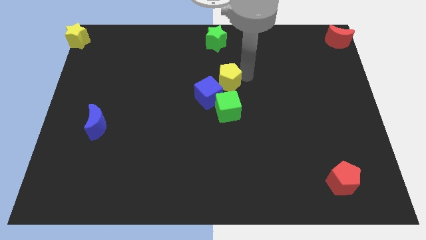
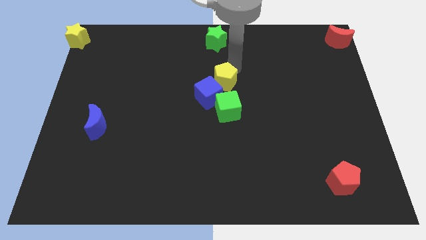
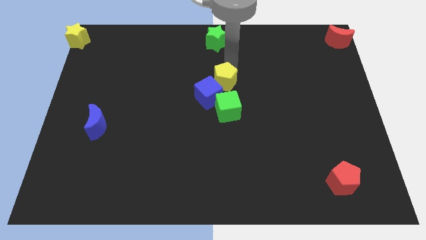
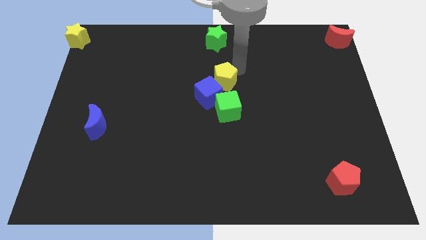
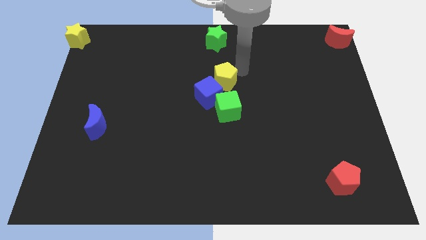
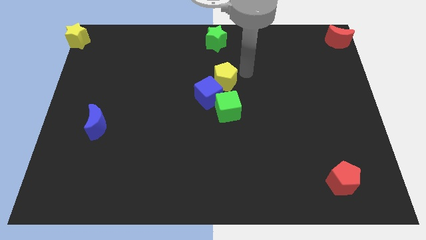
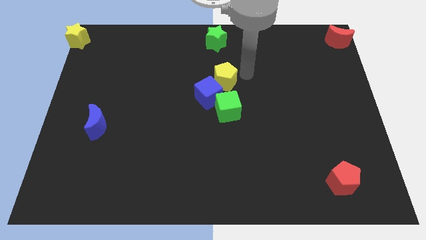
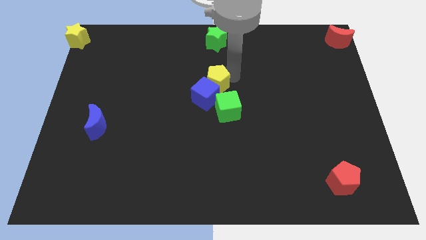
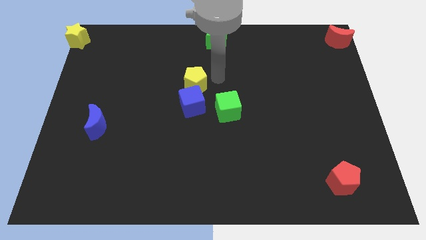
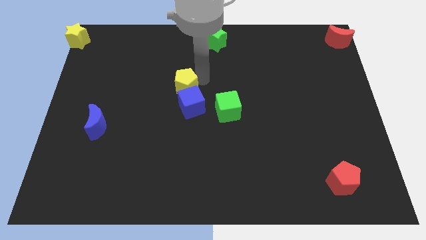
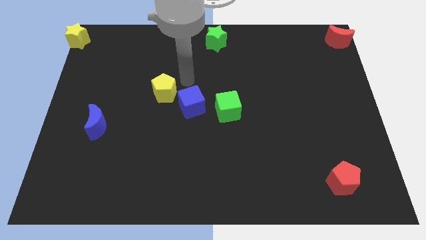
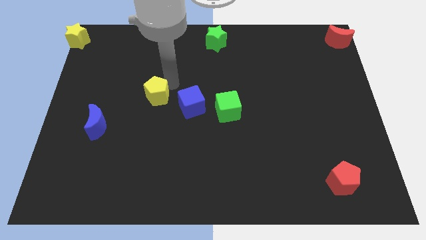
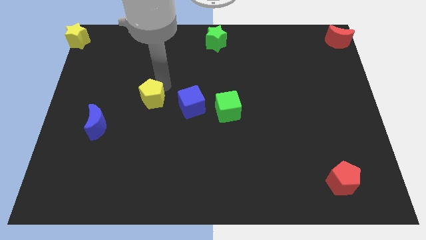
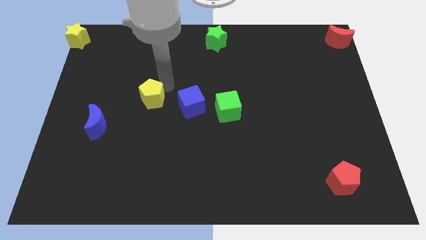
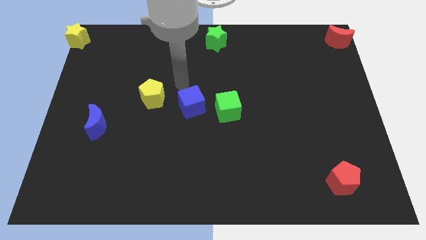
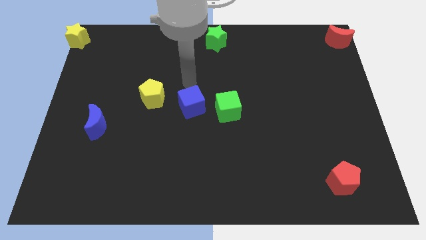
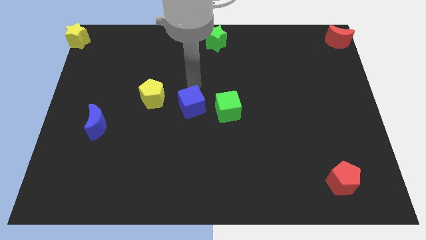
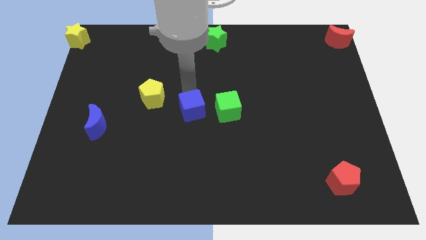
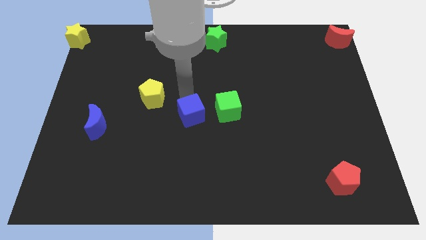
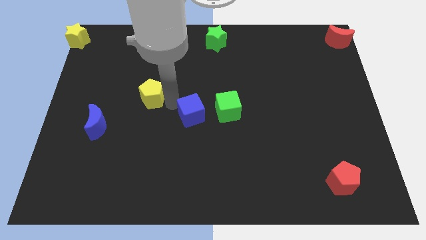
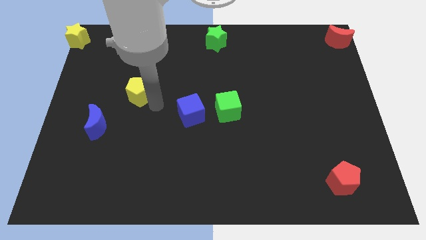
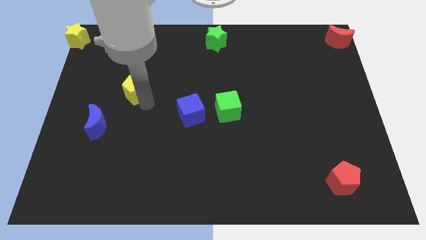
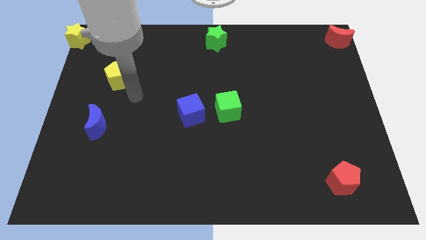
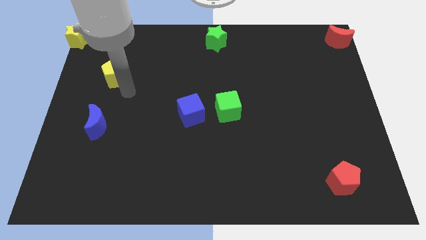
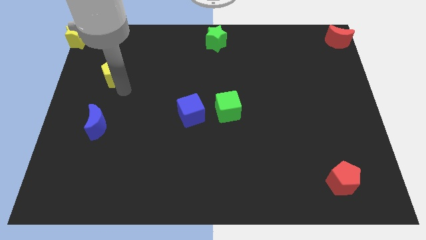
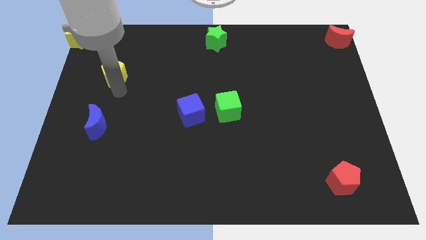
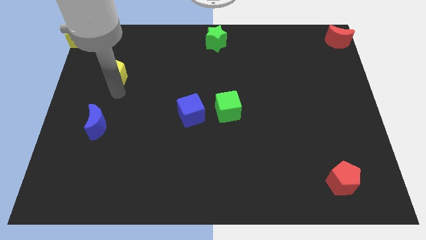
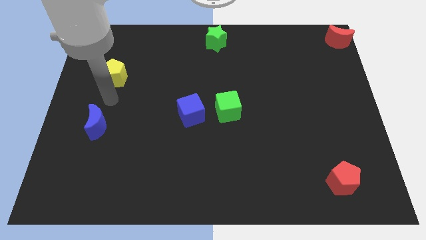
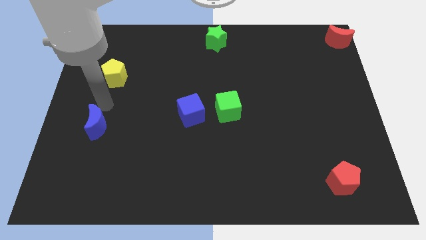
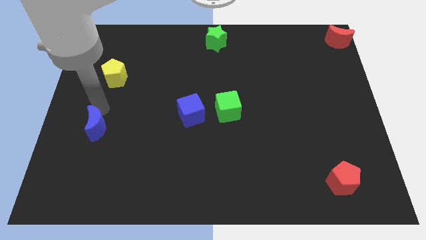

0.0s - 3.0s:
move the yellow pentagon diagonally left of the blue cube

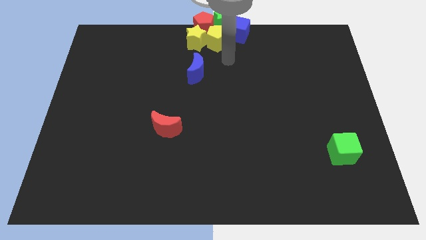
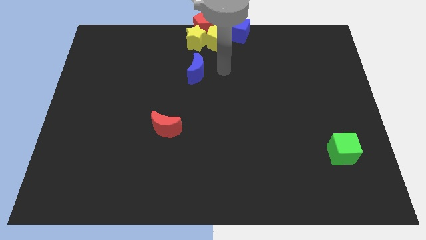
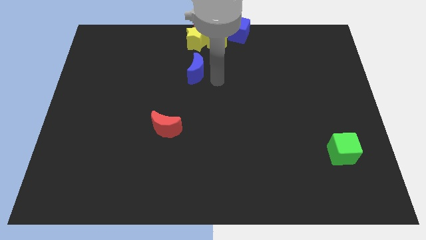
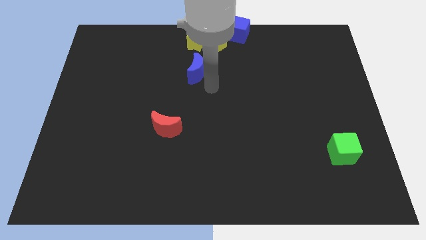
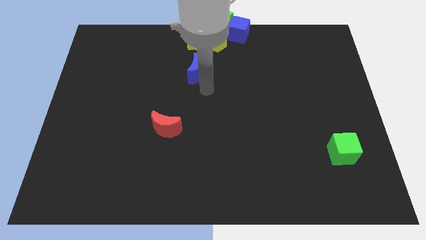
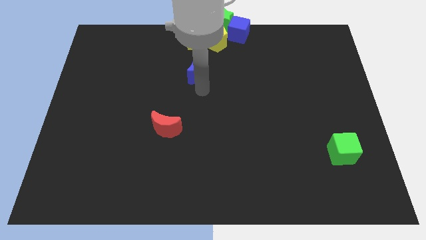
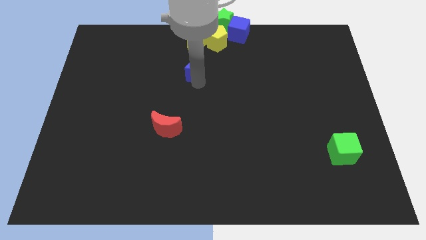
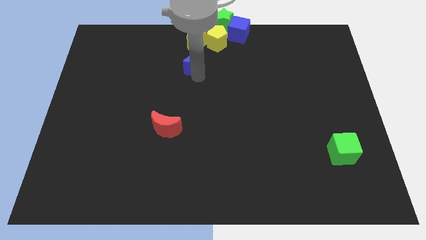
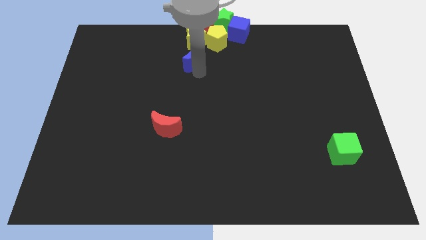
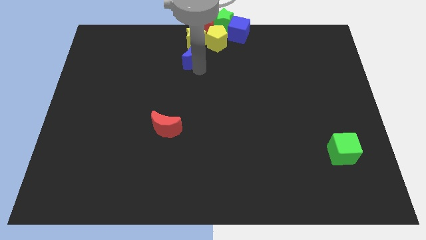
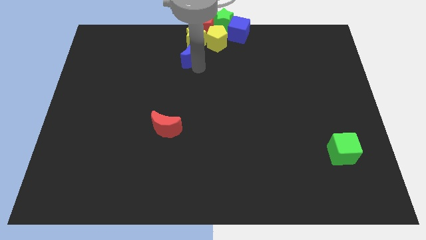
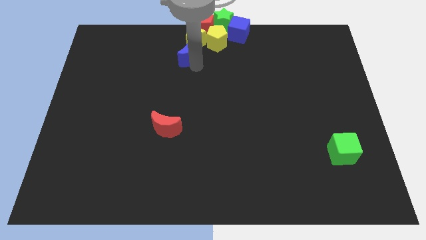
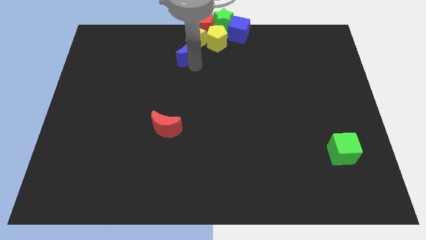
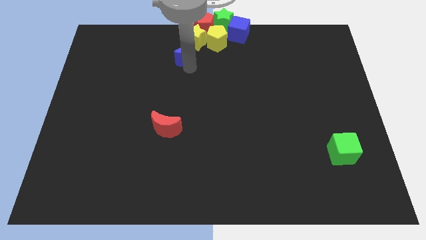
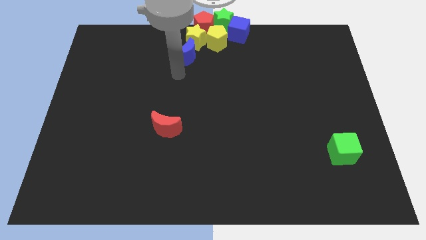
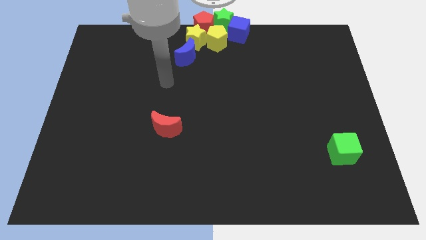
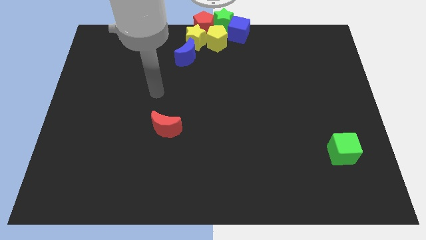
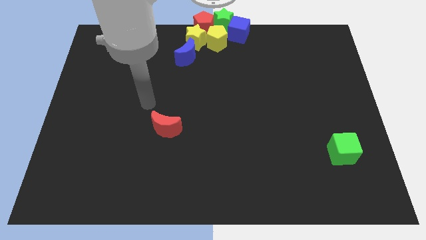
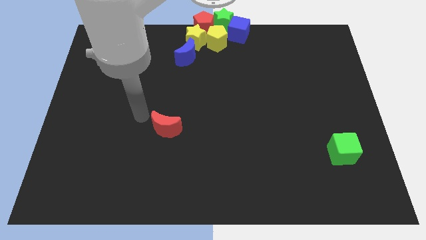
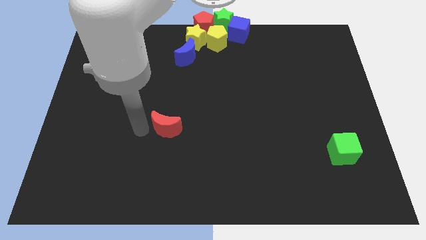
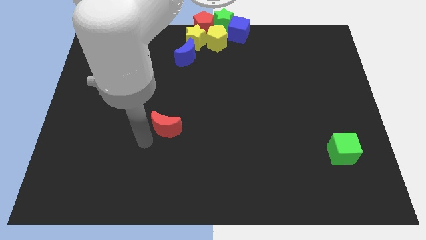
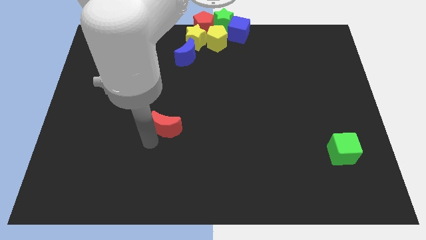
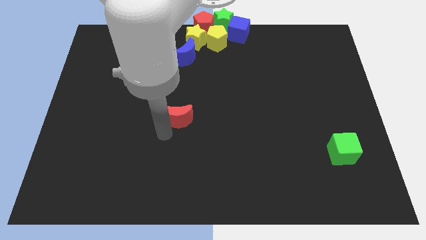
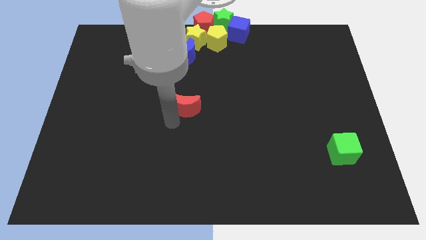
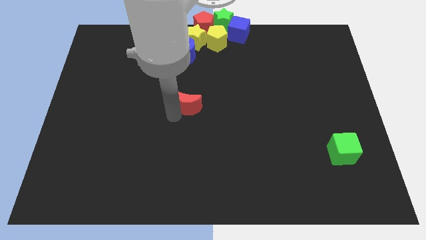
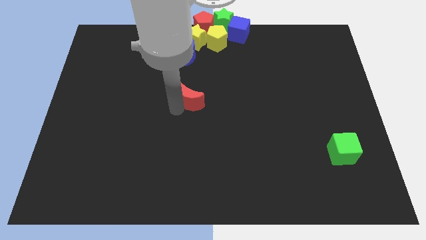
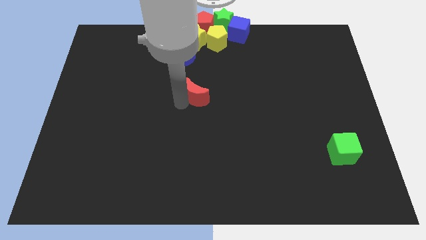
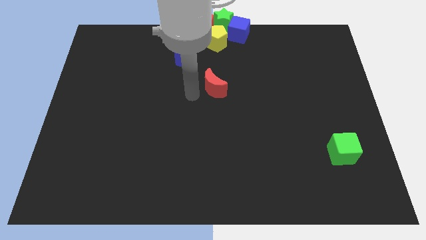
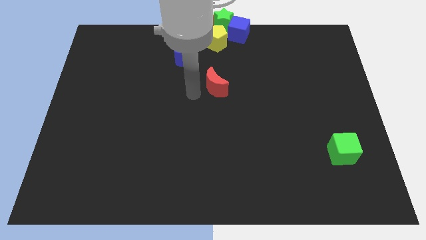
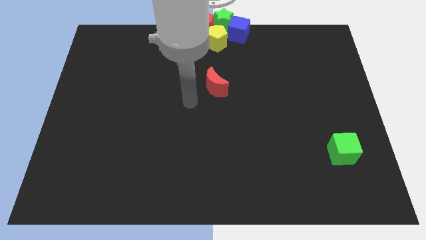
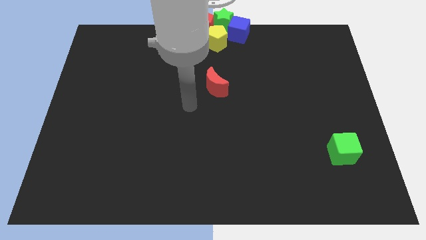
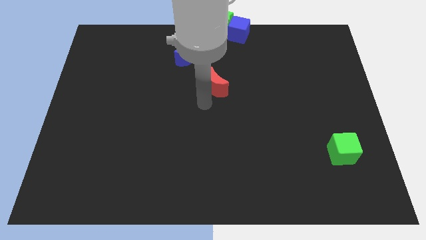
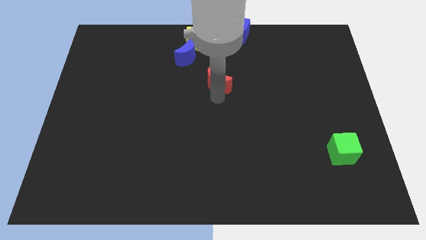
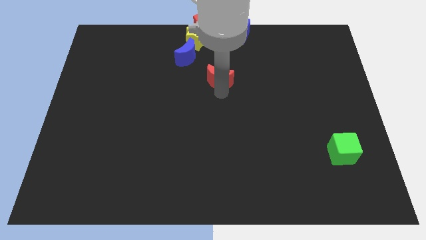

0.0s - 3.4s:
slide blue crescent and red crescent diagonal to each other

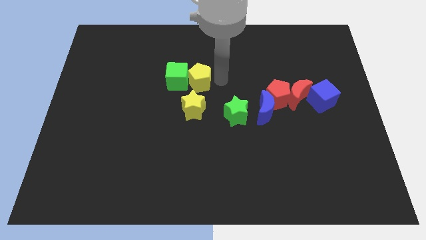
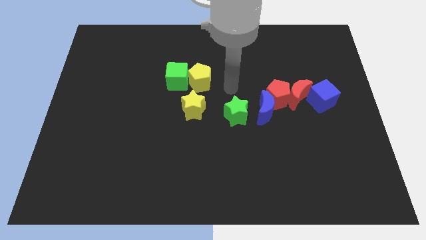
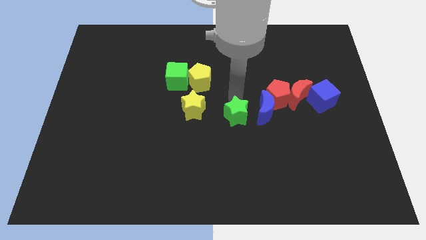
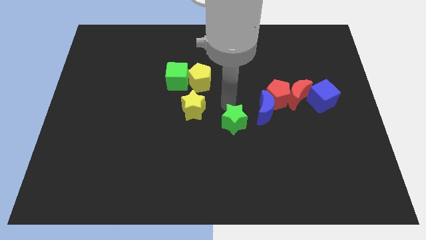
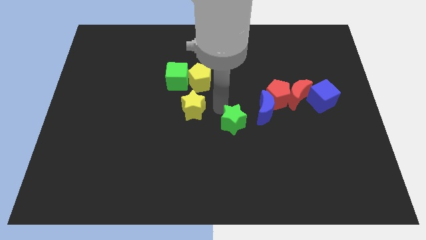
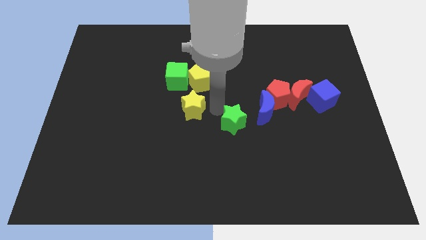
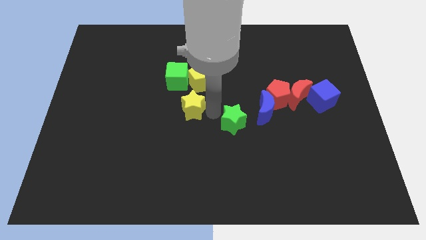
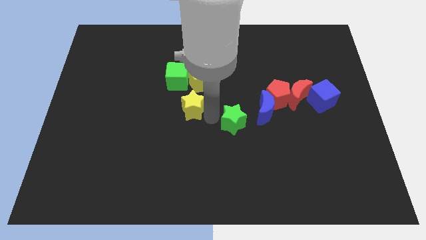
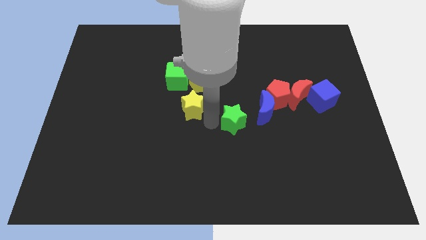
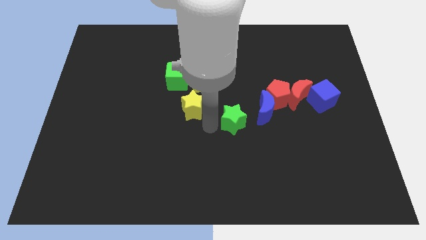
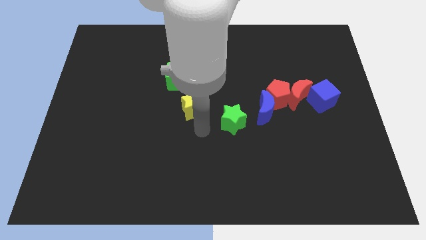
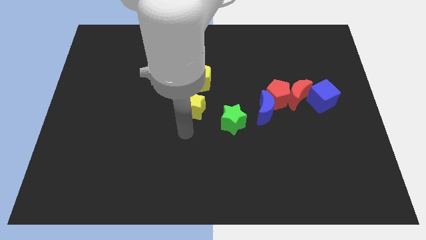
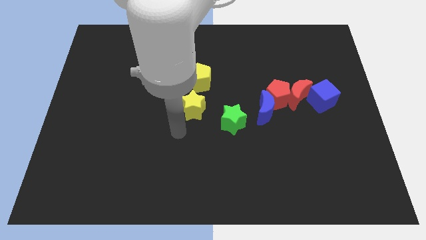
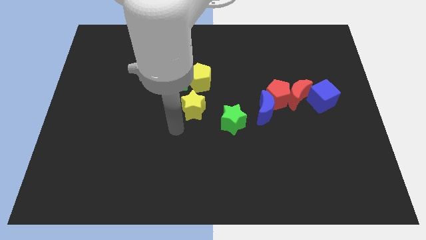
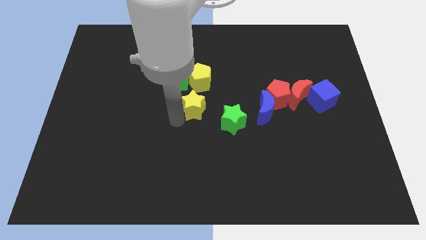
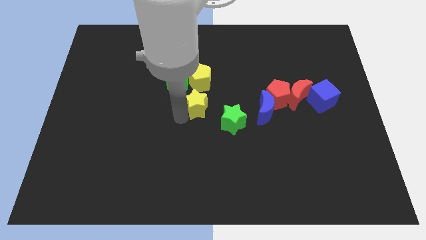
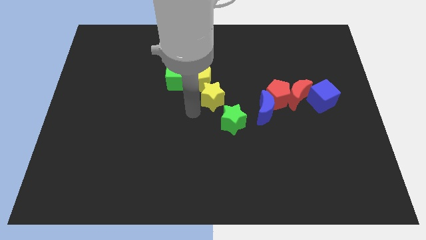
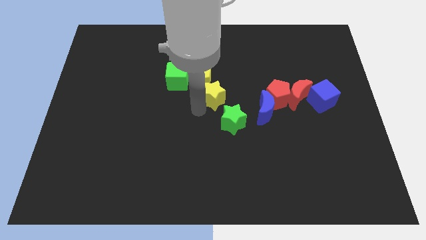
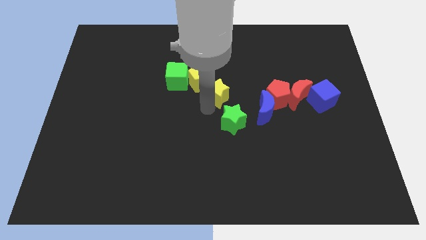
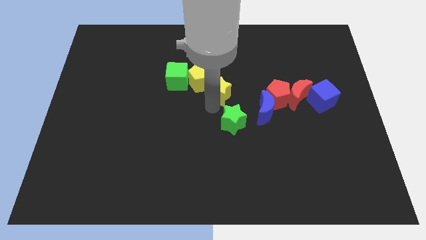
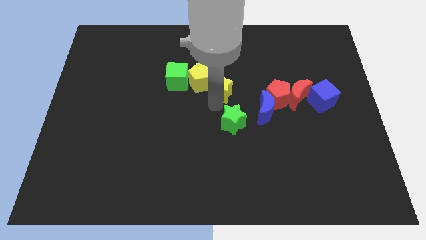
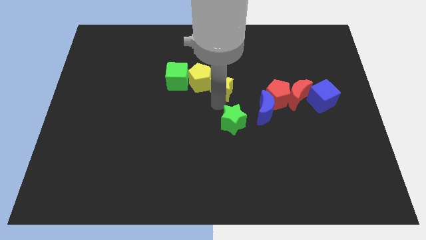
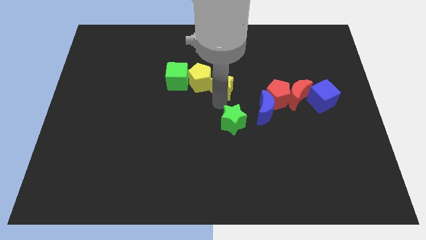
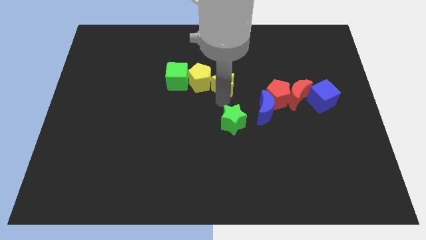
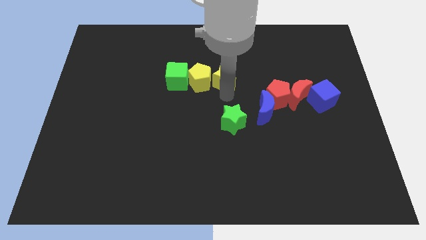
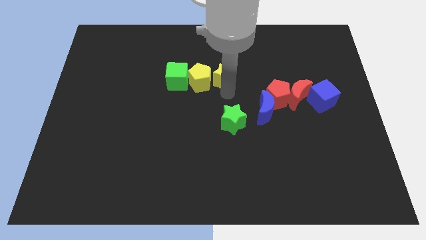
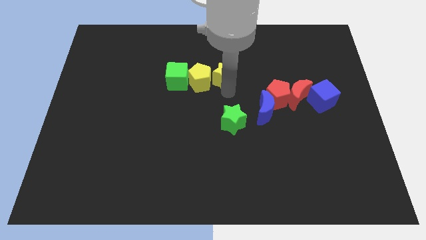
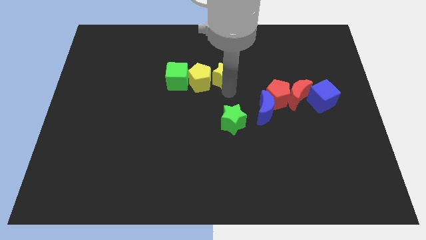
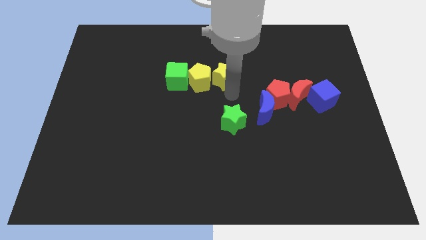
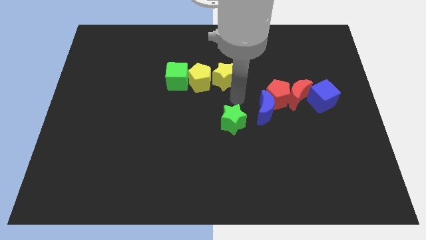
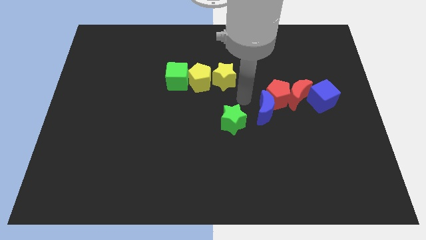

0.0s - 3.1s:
put the yellow star on the right side of the yellow pentagon
